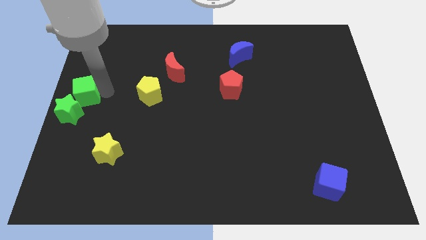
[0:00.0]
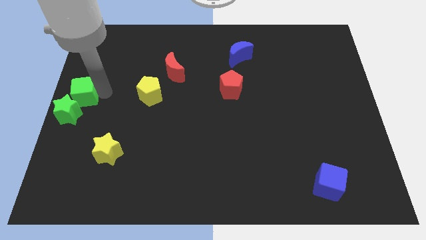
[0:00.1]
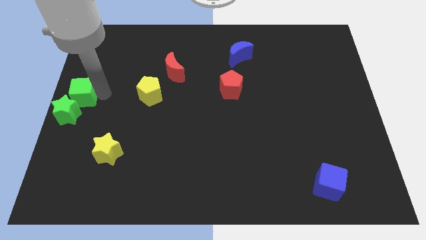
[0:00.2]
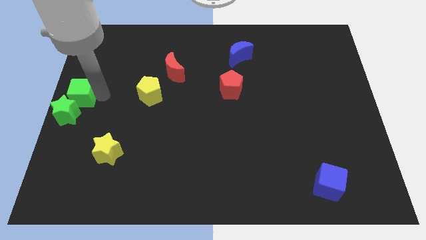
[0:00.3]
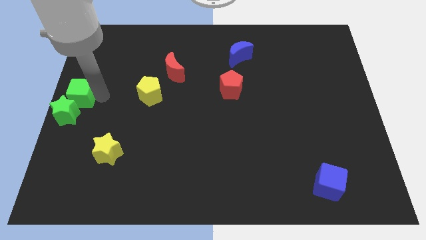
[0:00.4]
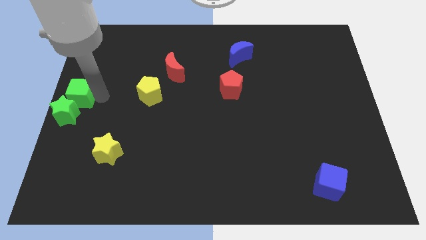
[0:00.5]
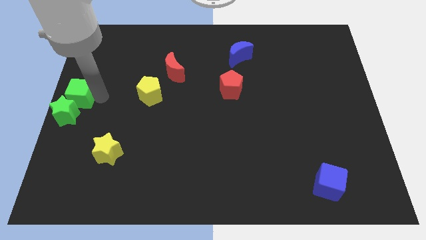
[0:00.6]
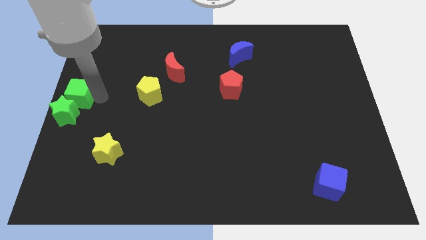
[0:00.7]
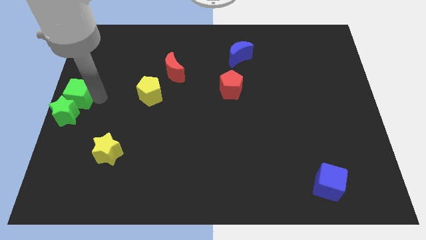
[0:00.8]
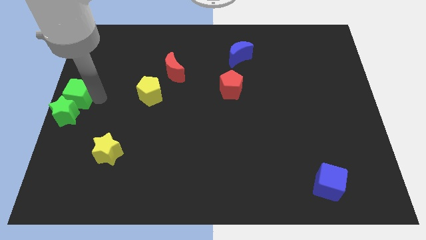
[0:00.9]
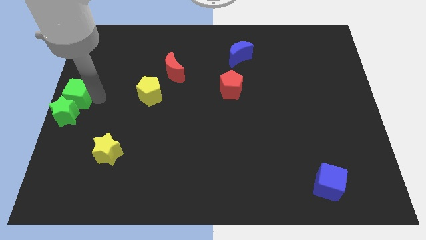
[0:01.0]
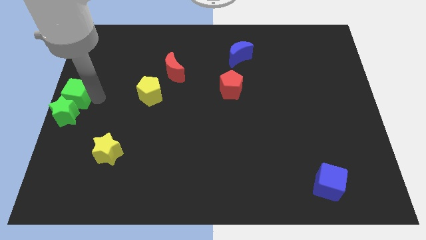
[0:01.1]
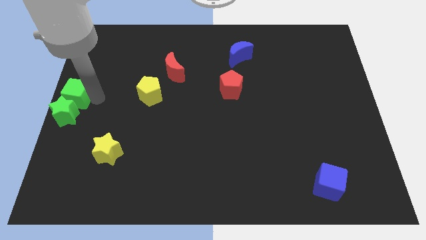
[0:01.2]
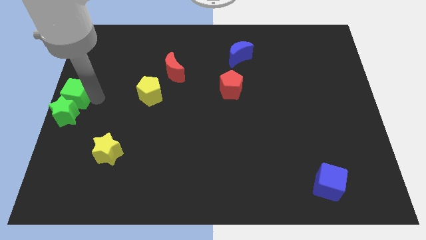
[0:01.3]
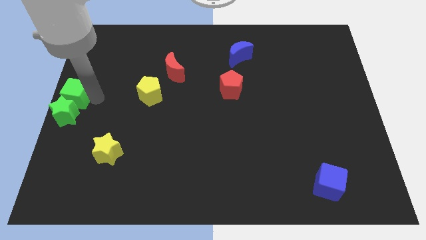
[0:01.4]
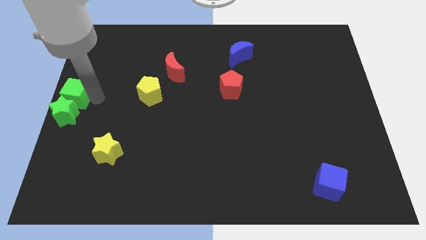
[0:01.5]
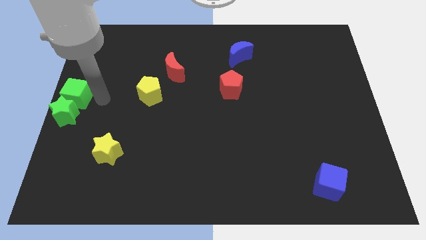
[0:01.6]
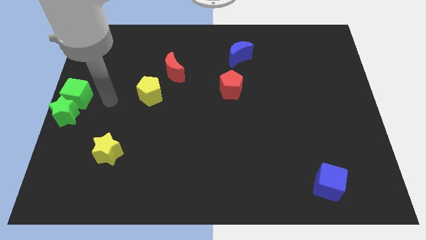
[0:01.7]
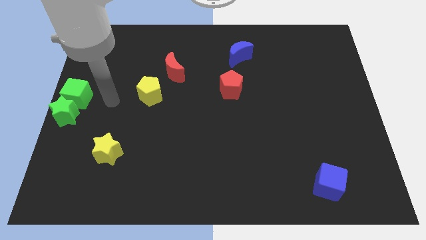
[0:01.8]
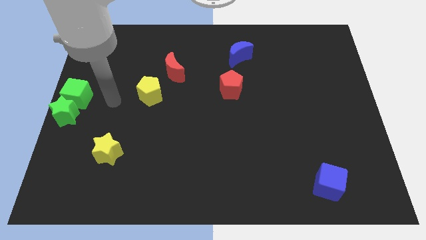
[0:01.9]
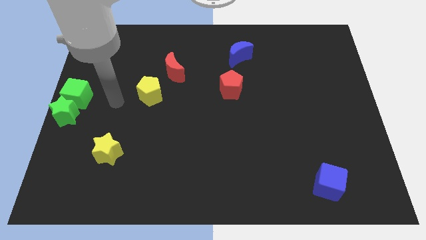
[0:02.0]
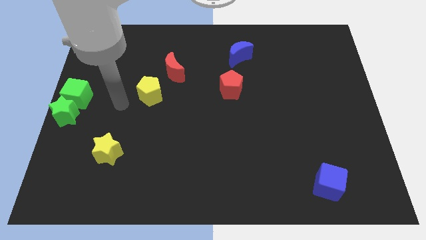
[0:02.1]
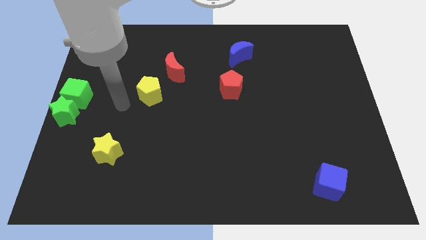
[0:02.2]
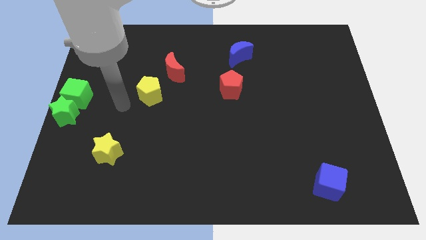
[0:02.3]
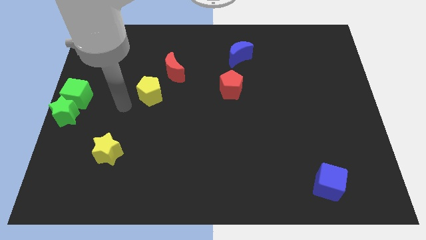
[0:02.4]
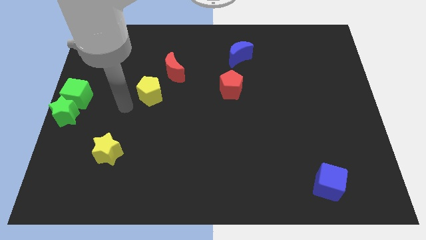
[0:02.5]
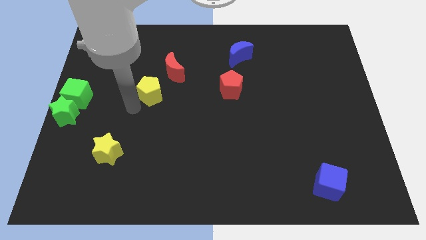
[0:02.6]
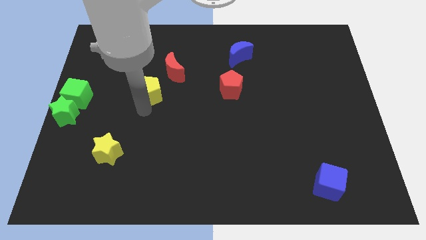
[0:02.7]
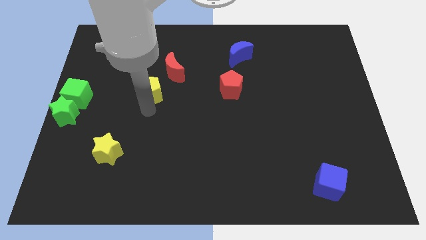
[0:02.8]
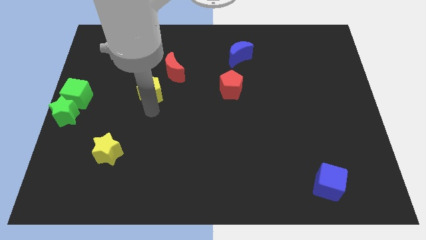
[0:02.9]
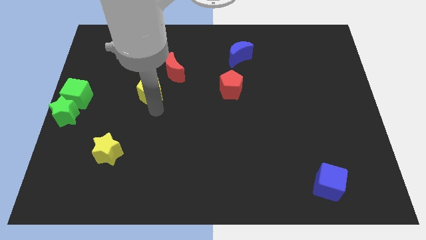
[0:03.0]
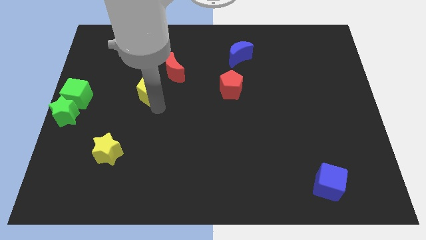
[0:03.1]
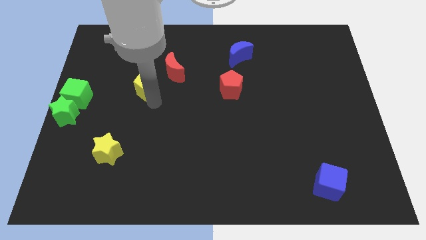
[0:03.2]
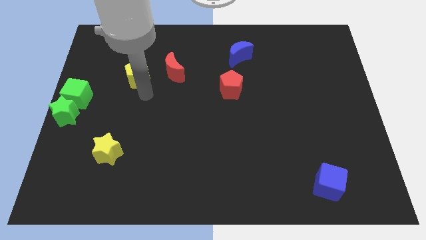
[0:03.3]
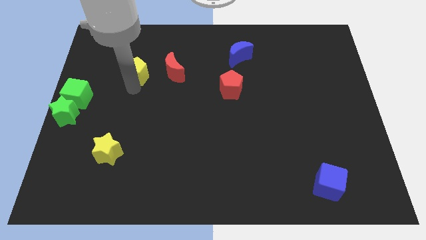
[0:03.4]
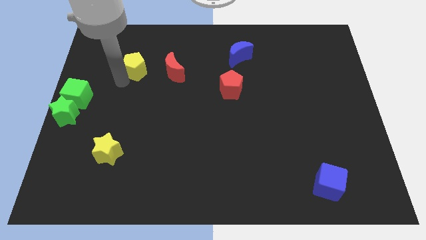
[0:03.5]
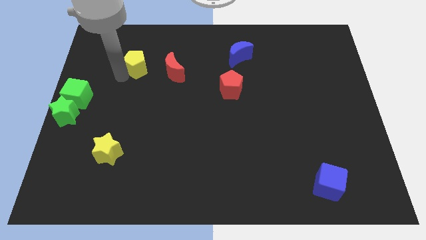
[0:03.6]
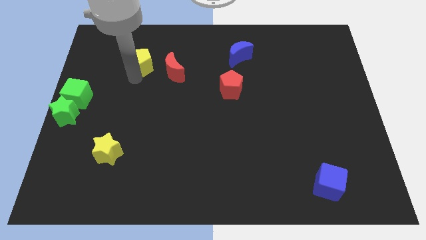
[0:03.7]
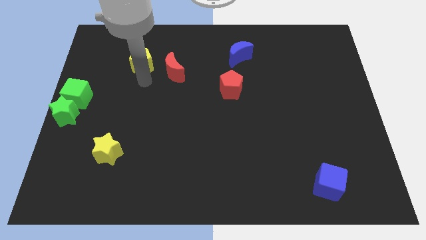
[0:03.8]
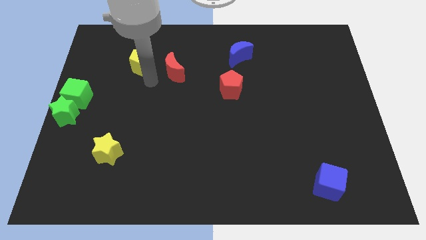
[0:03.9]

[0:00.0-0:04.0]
place the yellow pentagon left to the red moon

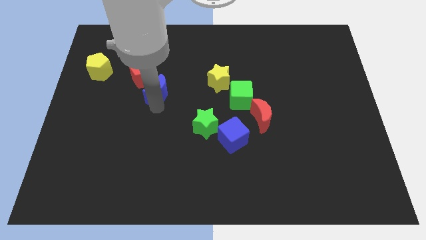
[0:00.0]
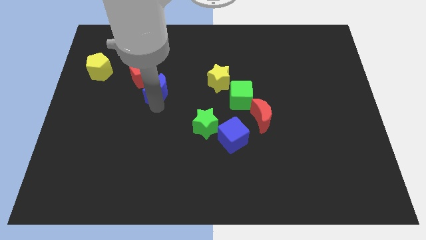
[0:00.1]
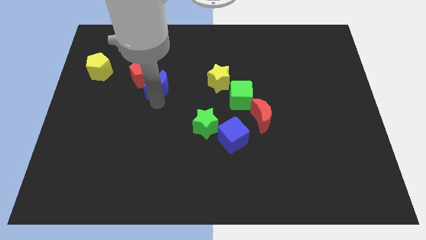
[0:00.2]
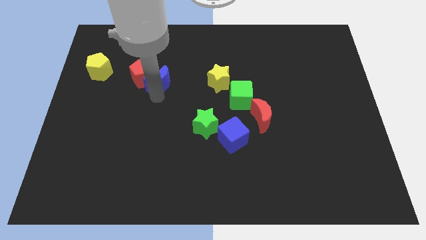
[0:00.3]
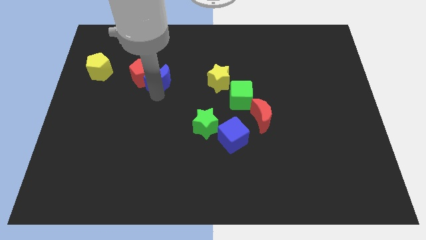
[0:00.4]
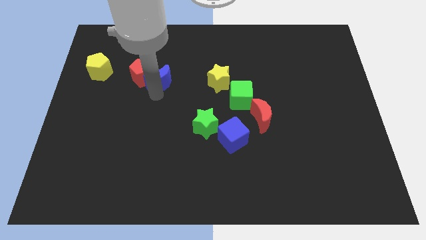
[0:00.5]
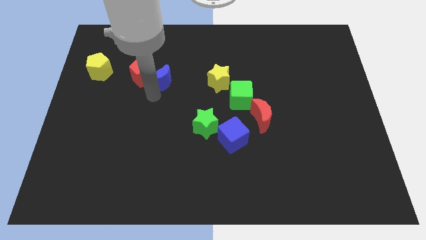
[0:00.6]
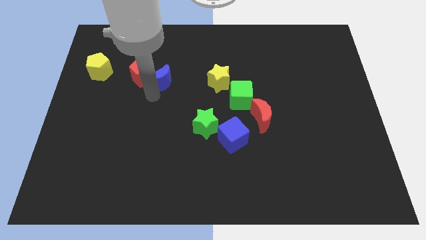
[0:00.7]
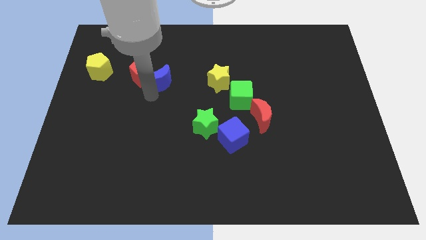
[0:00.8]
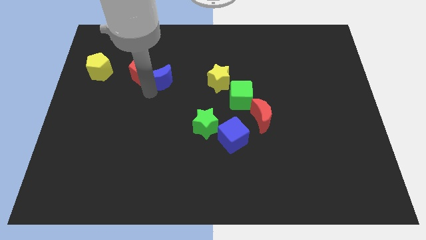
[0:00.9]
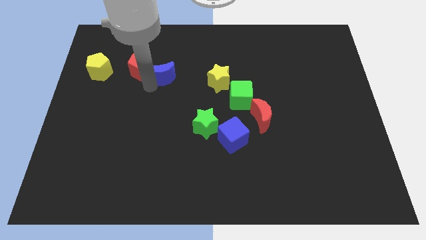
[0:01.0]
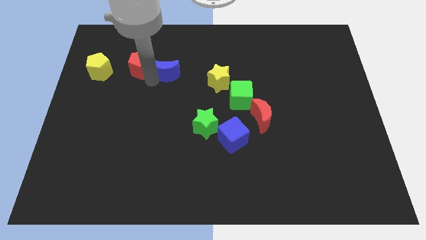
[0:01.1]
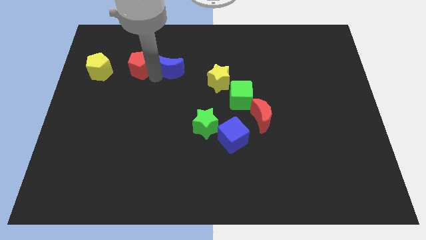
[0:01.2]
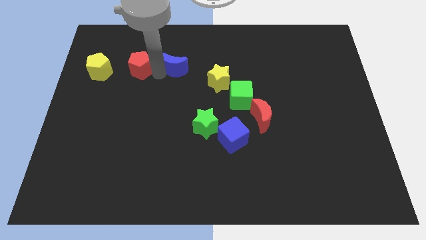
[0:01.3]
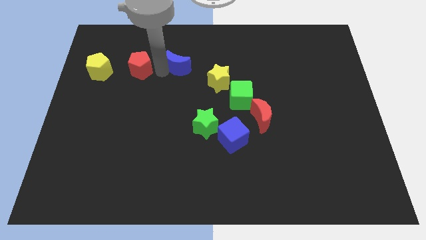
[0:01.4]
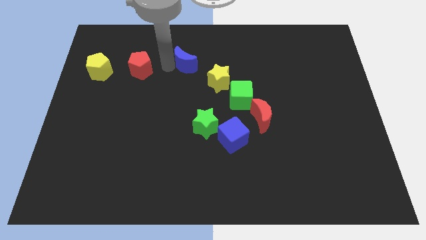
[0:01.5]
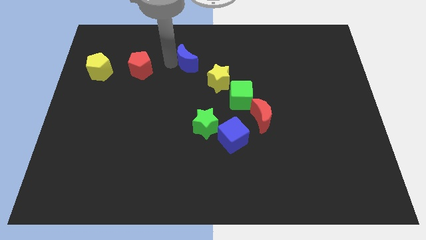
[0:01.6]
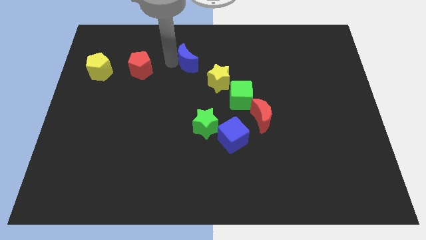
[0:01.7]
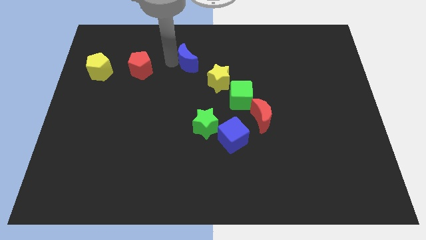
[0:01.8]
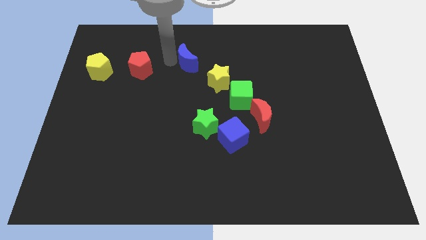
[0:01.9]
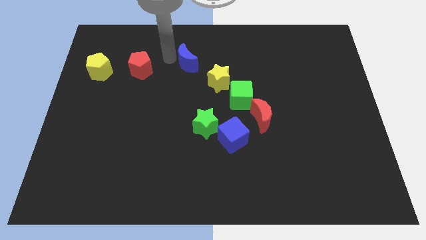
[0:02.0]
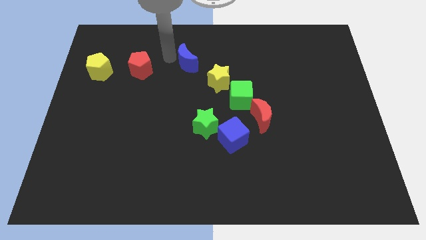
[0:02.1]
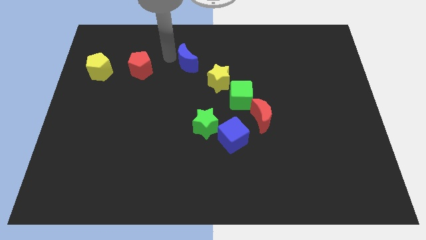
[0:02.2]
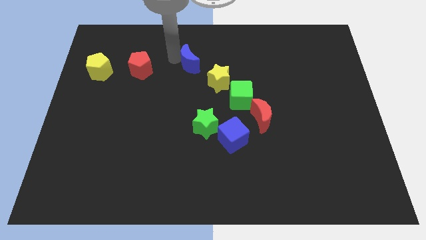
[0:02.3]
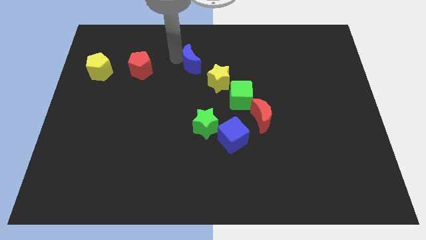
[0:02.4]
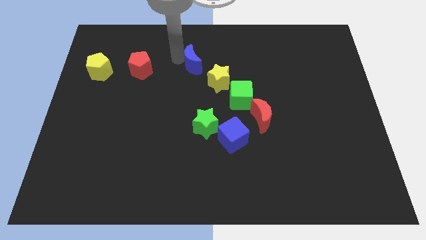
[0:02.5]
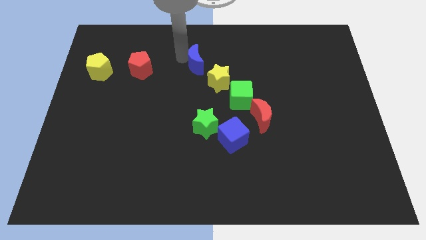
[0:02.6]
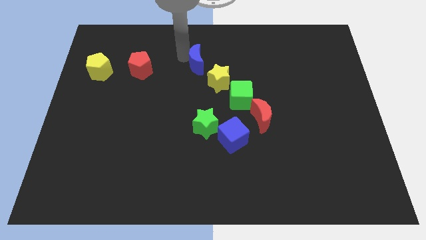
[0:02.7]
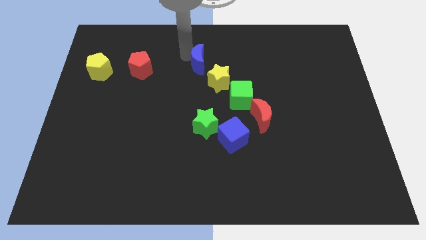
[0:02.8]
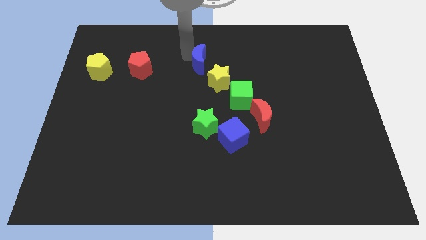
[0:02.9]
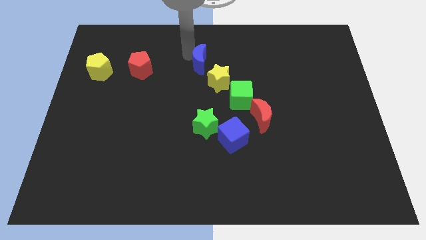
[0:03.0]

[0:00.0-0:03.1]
place blue moon towards yellow star

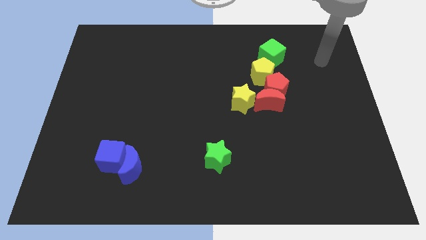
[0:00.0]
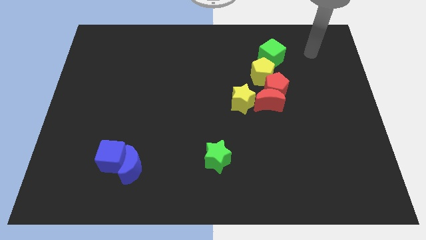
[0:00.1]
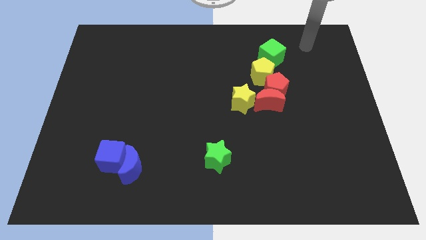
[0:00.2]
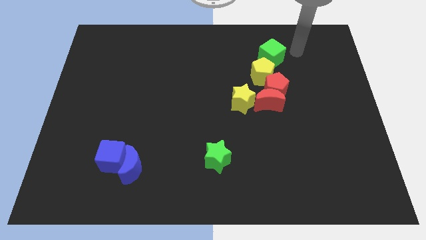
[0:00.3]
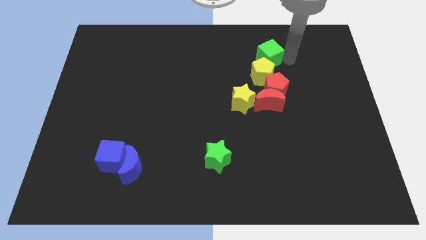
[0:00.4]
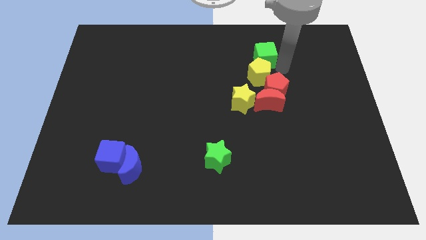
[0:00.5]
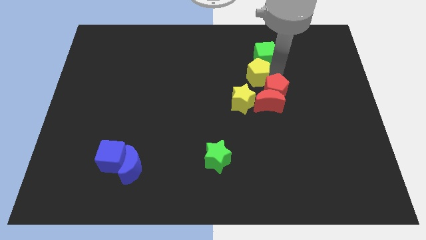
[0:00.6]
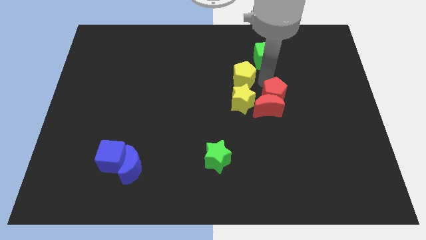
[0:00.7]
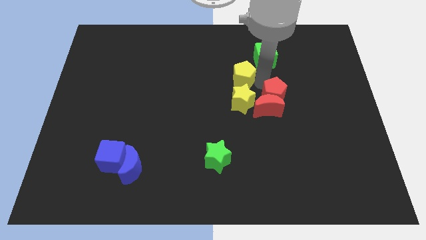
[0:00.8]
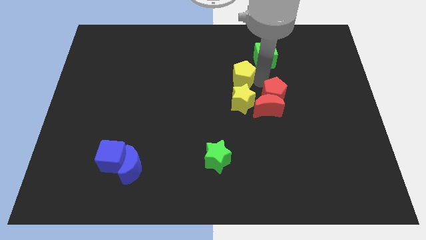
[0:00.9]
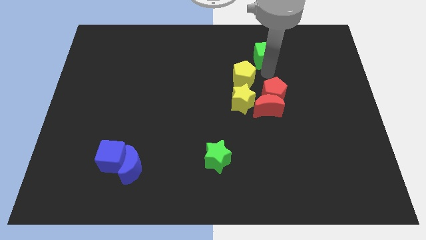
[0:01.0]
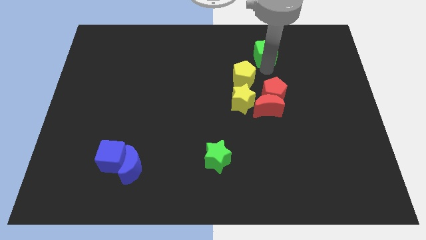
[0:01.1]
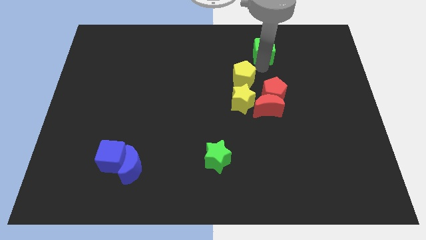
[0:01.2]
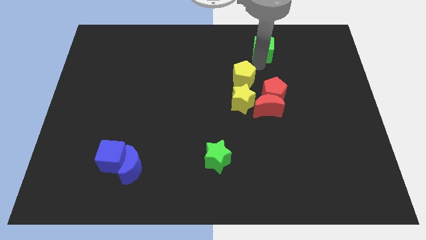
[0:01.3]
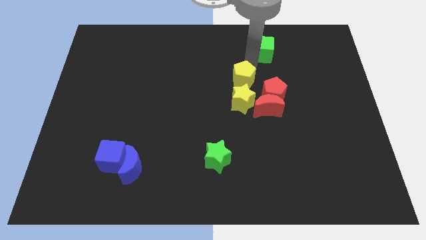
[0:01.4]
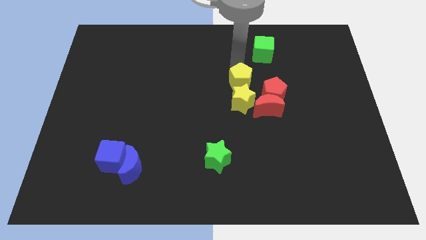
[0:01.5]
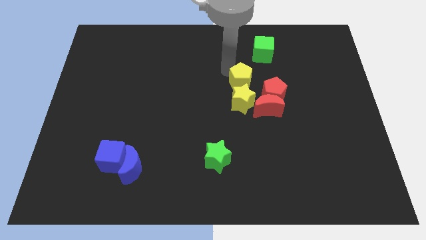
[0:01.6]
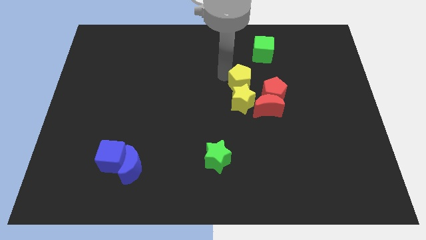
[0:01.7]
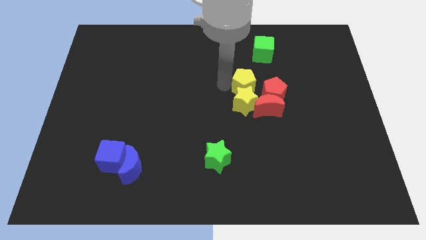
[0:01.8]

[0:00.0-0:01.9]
move the green cube away from the yellow pentagon
